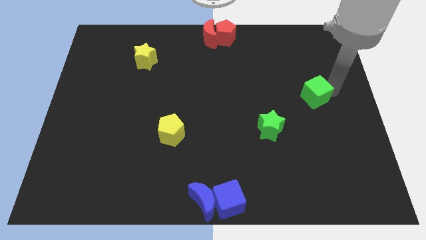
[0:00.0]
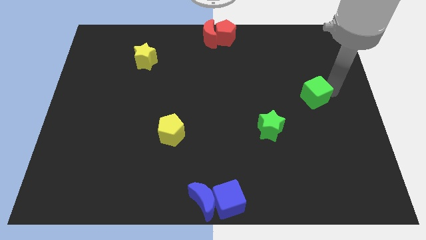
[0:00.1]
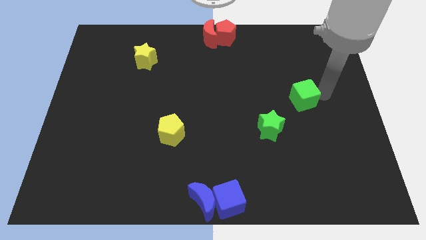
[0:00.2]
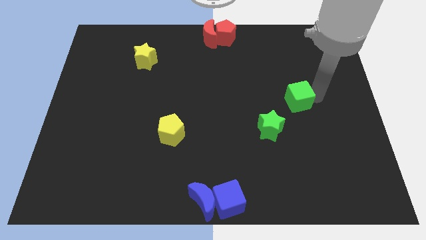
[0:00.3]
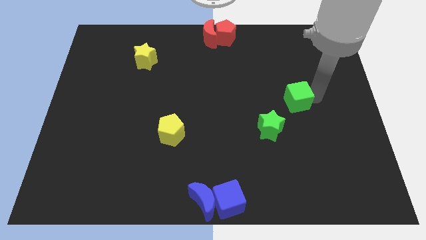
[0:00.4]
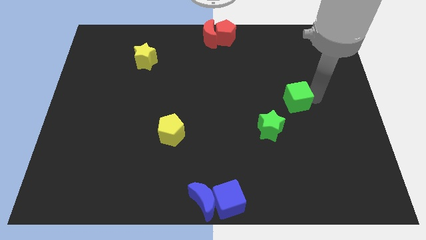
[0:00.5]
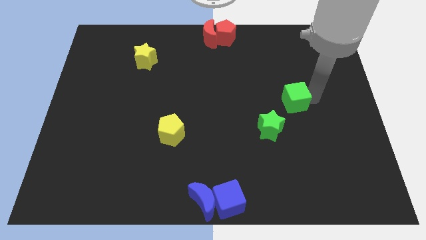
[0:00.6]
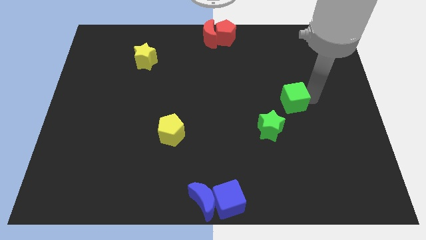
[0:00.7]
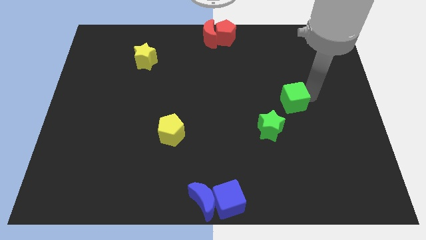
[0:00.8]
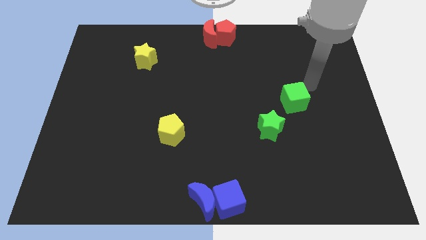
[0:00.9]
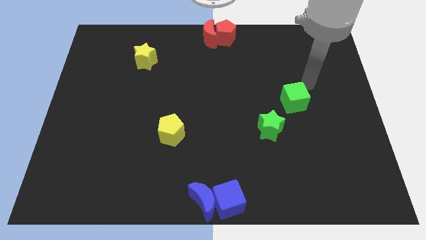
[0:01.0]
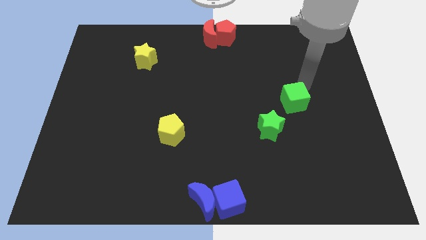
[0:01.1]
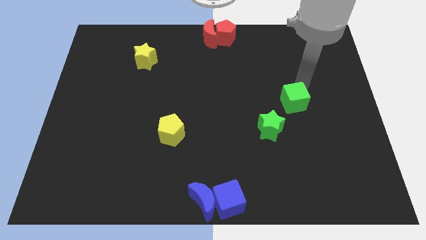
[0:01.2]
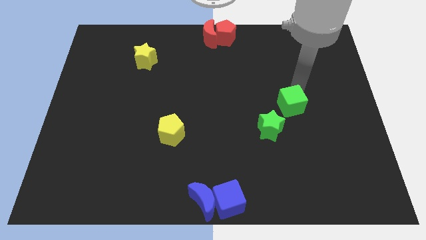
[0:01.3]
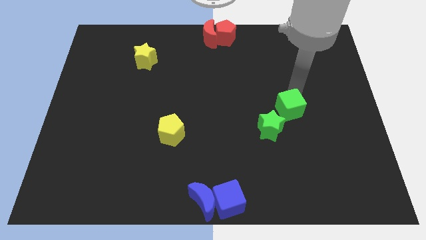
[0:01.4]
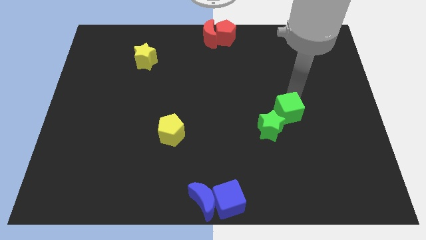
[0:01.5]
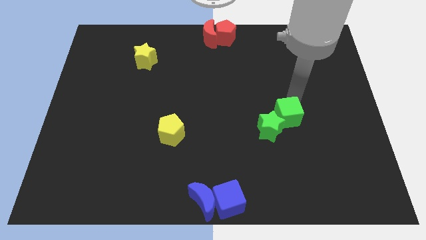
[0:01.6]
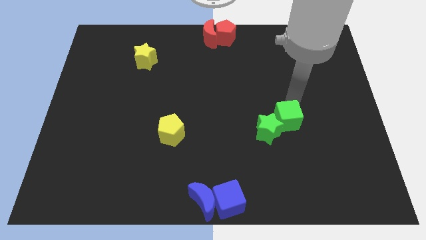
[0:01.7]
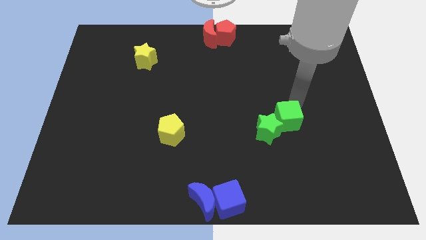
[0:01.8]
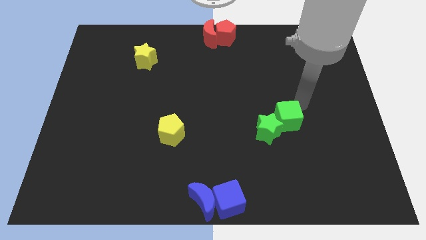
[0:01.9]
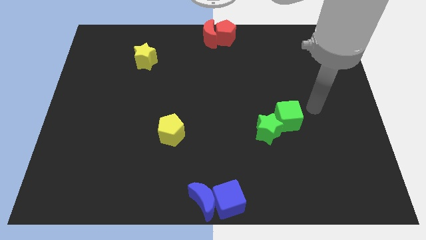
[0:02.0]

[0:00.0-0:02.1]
place green cube above to the green star

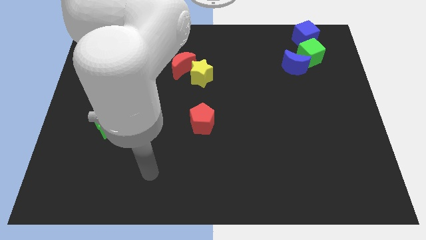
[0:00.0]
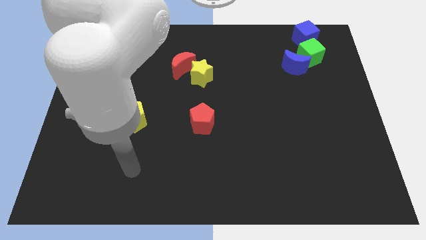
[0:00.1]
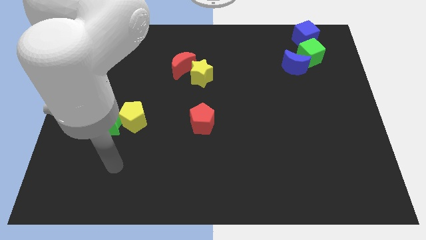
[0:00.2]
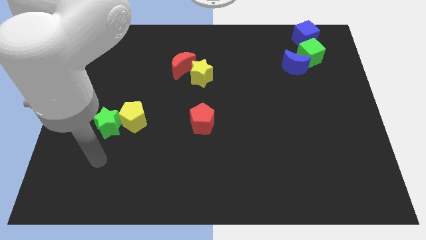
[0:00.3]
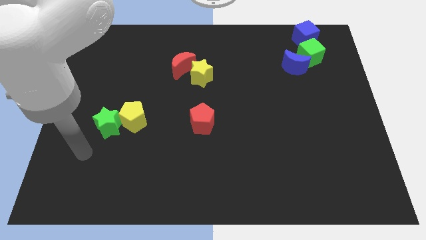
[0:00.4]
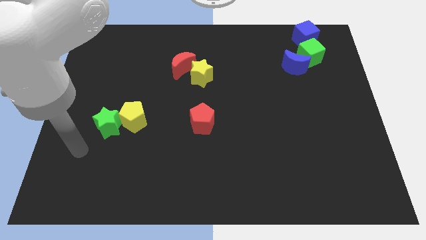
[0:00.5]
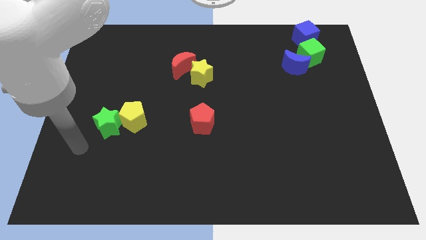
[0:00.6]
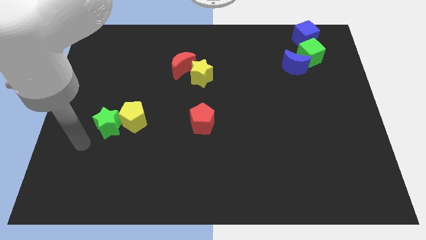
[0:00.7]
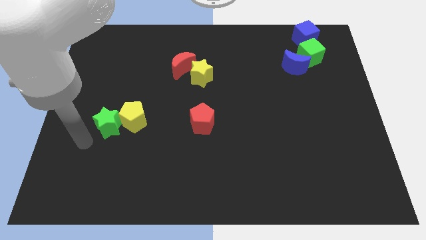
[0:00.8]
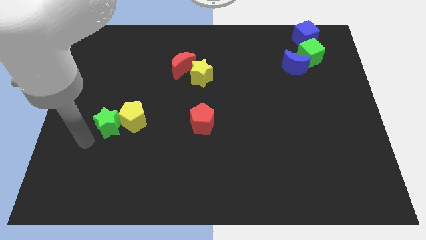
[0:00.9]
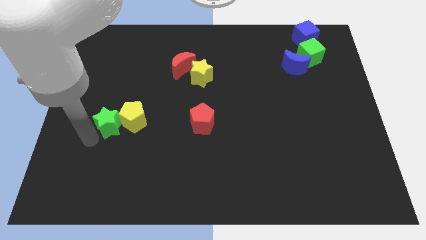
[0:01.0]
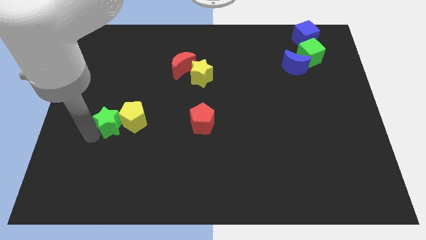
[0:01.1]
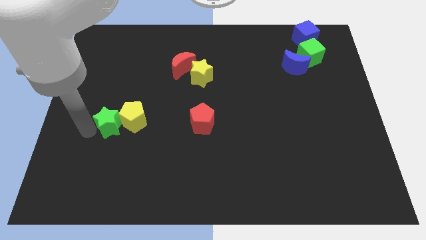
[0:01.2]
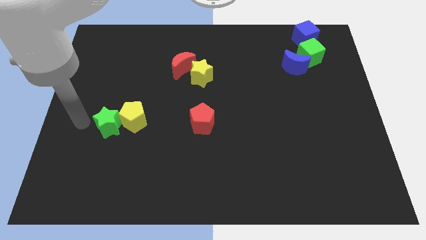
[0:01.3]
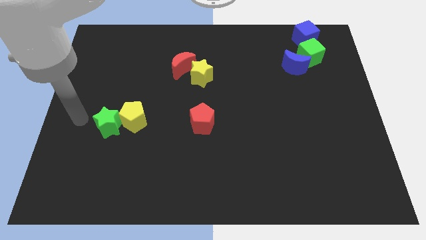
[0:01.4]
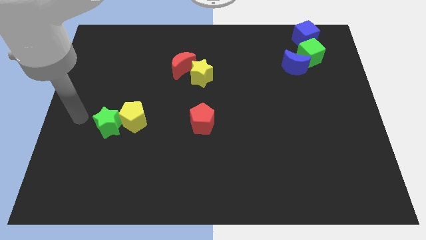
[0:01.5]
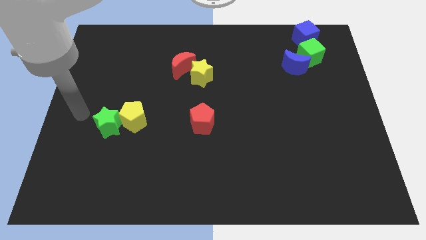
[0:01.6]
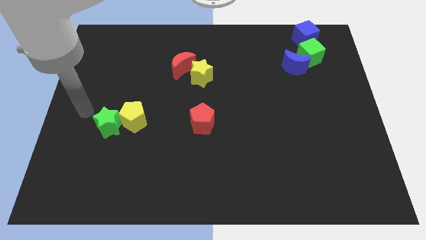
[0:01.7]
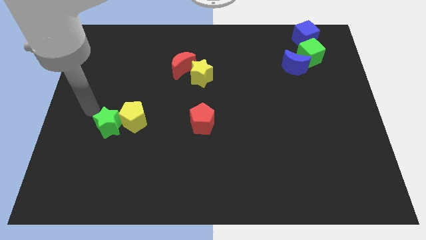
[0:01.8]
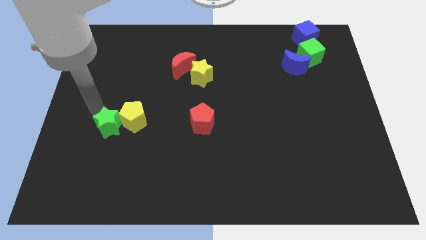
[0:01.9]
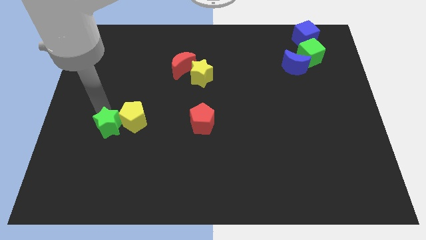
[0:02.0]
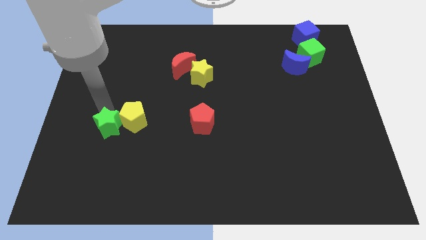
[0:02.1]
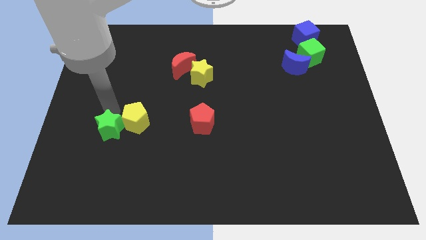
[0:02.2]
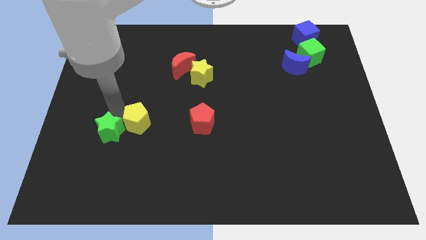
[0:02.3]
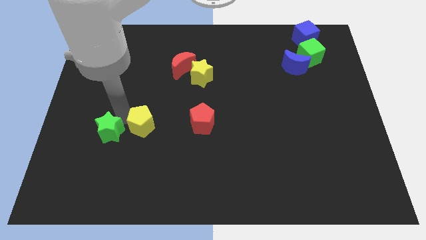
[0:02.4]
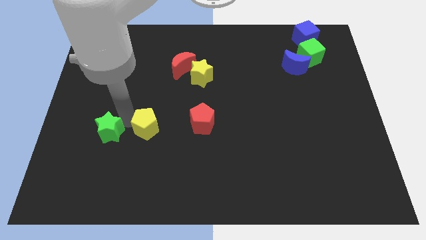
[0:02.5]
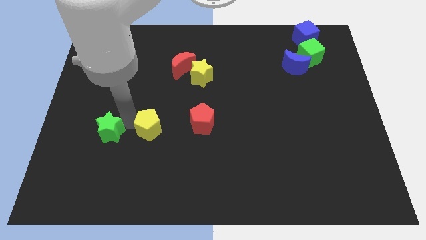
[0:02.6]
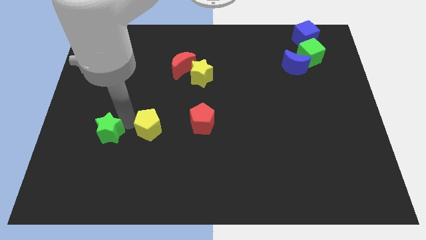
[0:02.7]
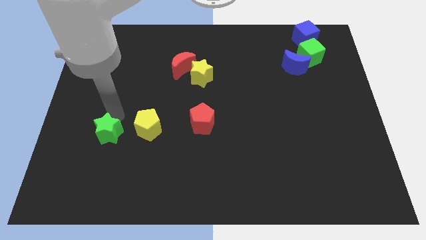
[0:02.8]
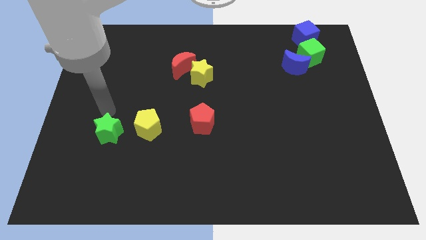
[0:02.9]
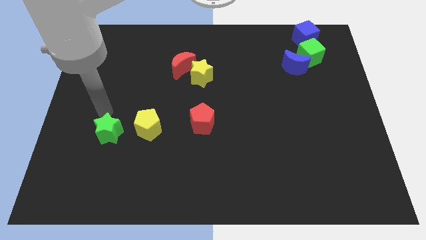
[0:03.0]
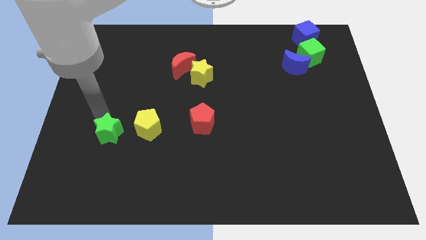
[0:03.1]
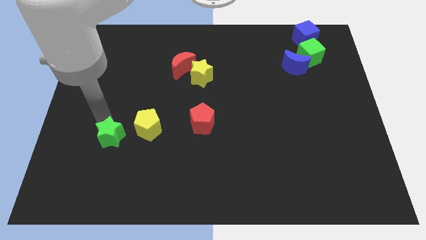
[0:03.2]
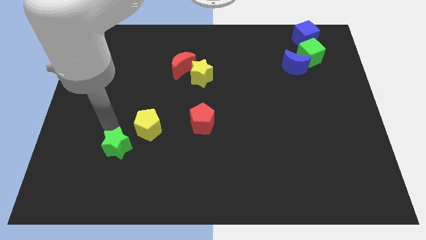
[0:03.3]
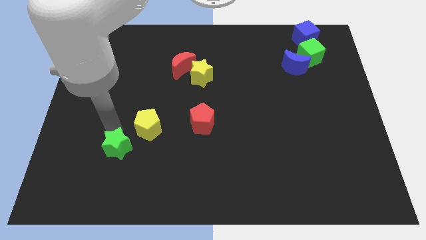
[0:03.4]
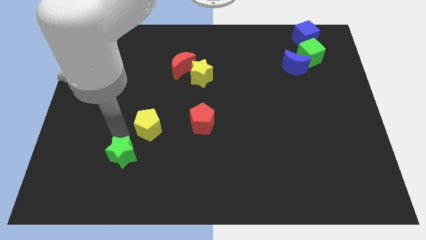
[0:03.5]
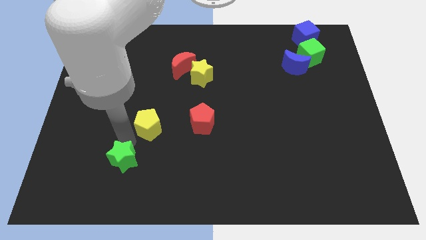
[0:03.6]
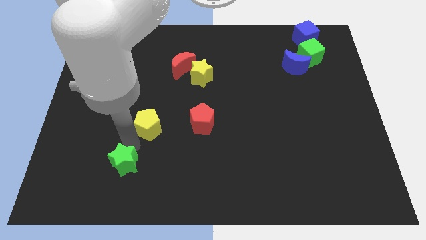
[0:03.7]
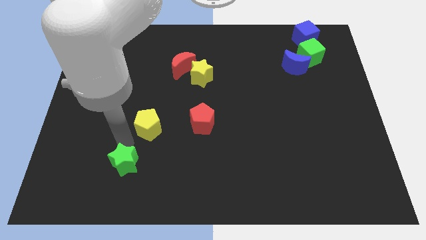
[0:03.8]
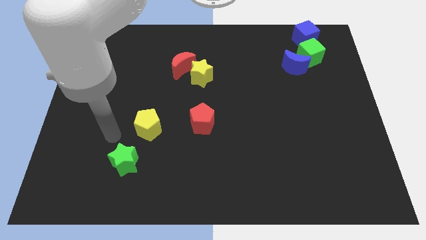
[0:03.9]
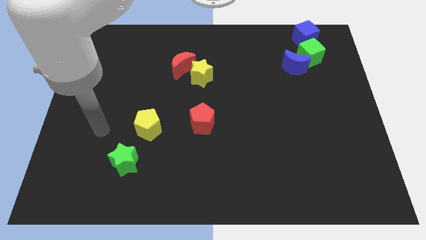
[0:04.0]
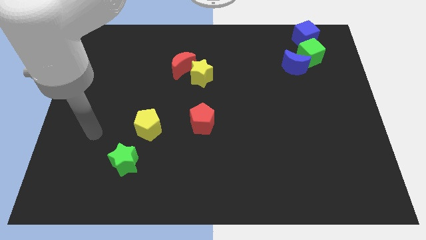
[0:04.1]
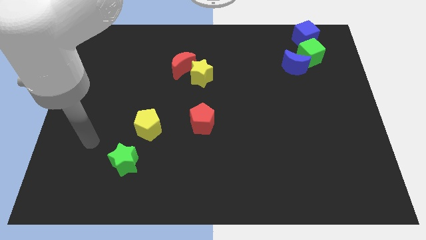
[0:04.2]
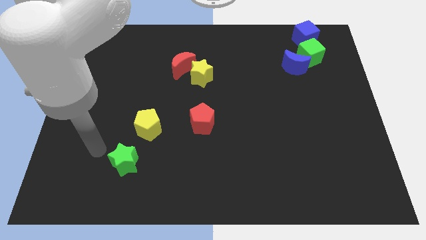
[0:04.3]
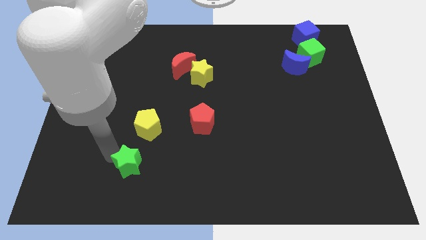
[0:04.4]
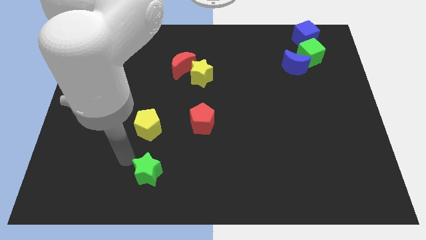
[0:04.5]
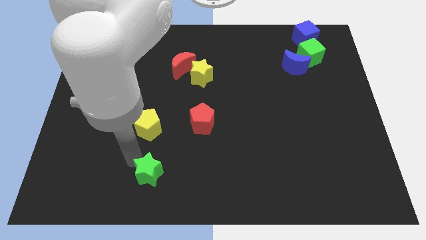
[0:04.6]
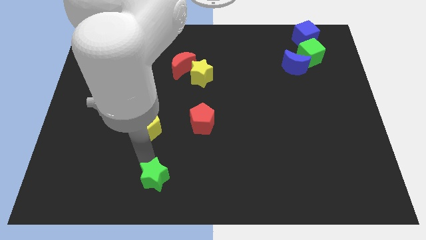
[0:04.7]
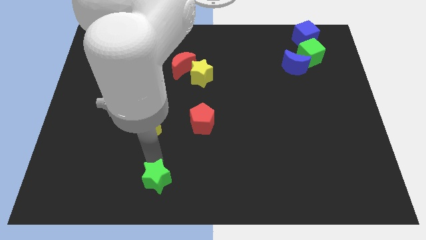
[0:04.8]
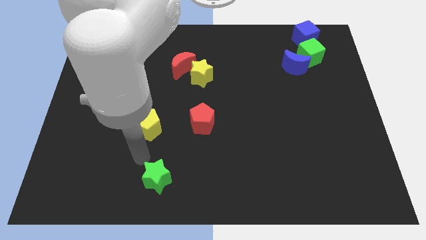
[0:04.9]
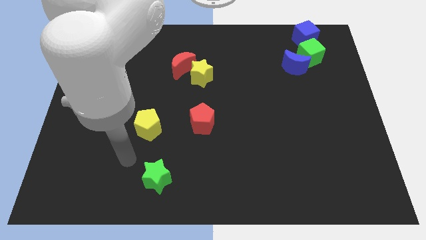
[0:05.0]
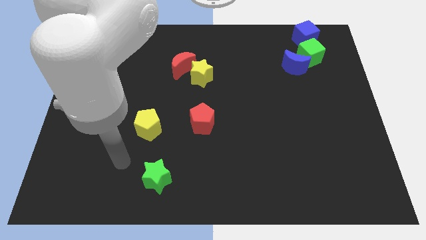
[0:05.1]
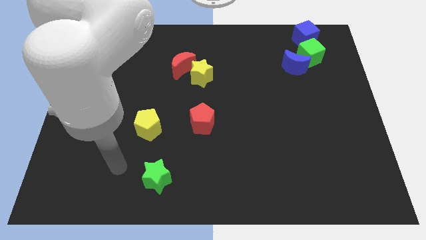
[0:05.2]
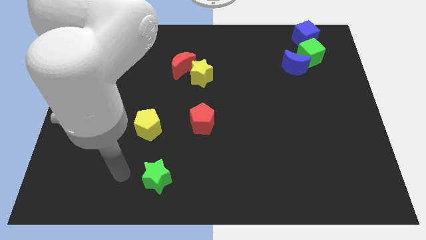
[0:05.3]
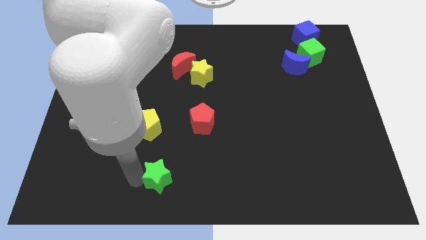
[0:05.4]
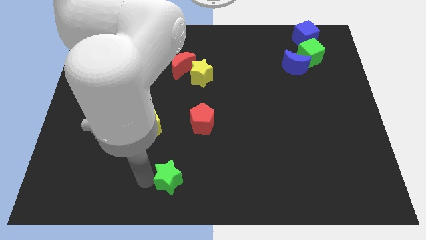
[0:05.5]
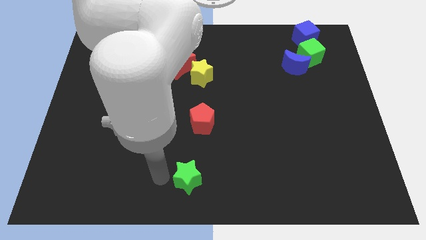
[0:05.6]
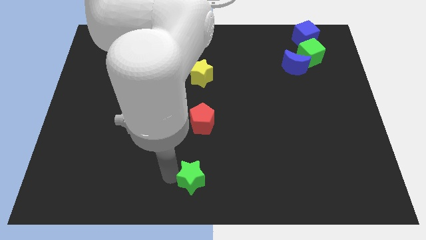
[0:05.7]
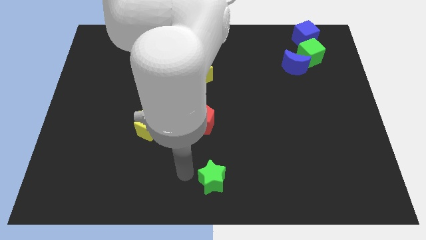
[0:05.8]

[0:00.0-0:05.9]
place the green star vertically below the red pentagon

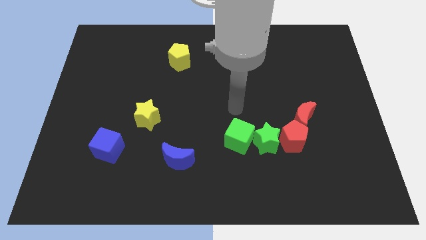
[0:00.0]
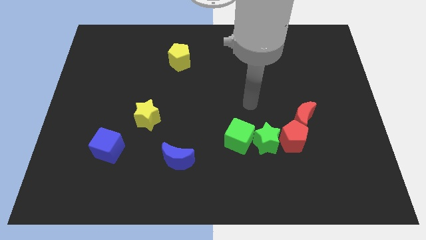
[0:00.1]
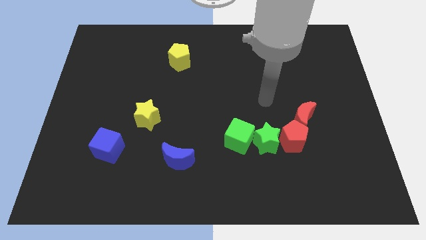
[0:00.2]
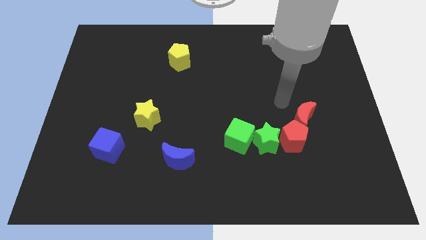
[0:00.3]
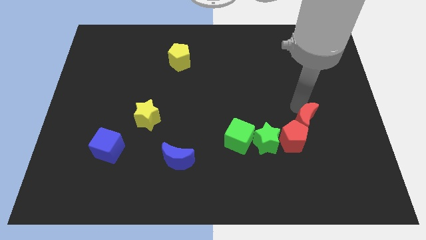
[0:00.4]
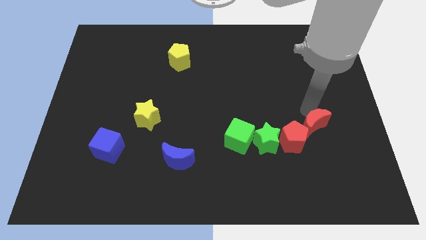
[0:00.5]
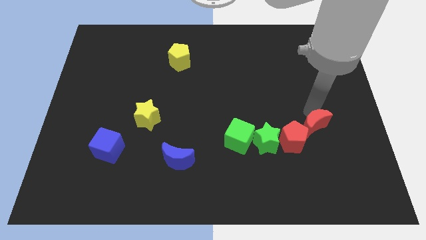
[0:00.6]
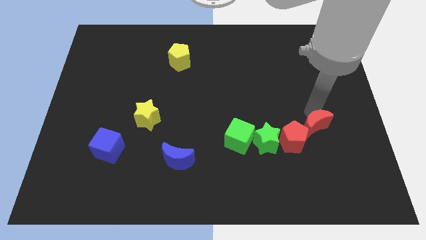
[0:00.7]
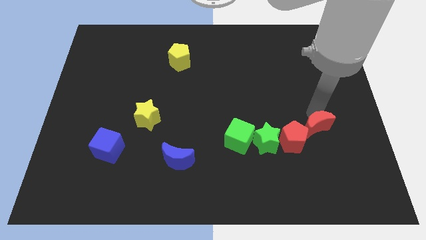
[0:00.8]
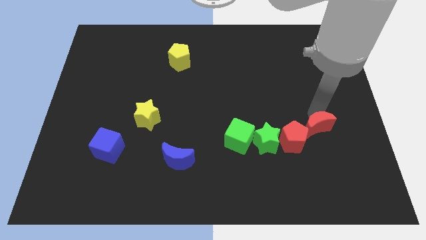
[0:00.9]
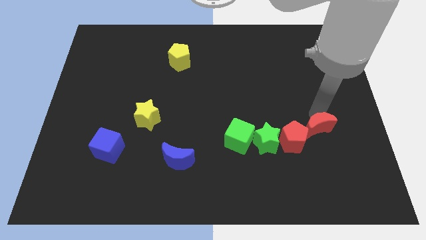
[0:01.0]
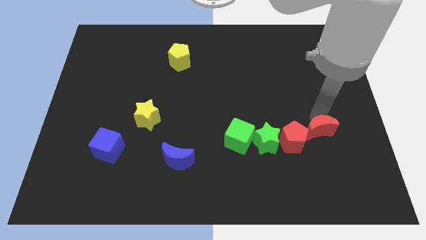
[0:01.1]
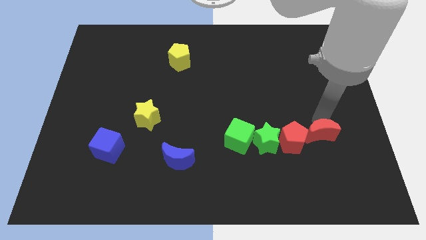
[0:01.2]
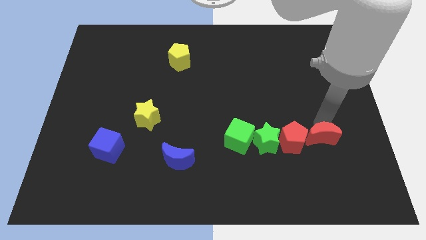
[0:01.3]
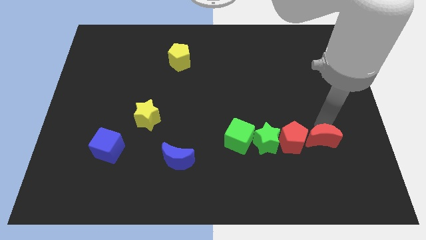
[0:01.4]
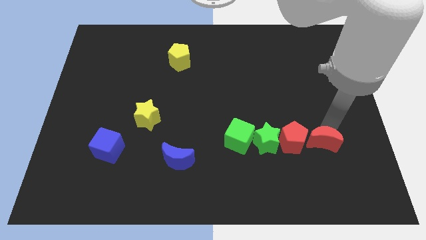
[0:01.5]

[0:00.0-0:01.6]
push the red crescent to the right of the red pentagon
